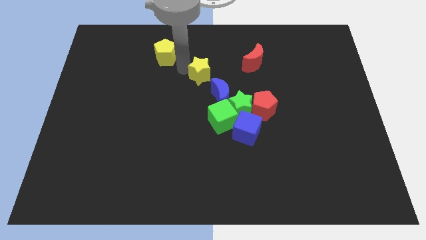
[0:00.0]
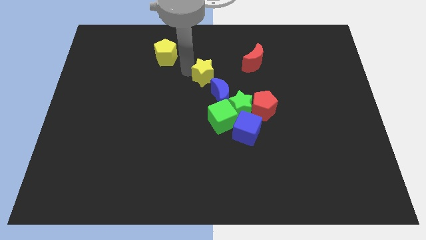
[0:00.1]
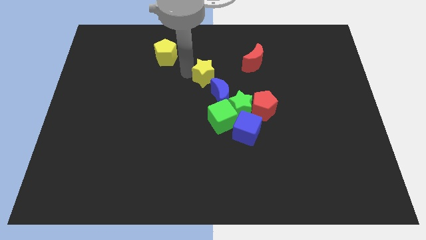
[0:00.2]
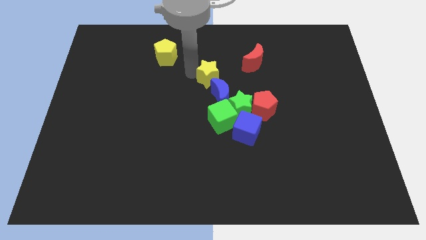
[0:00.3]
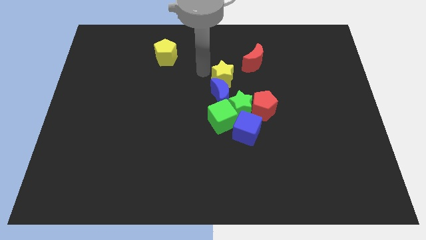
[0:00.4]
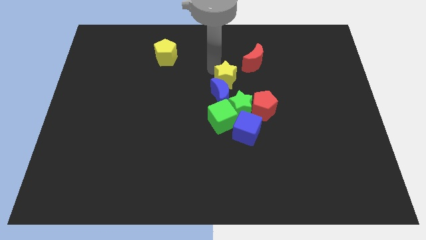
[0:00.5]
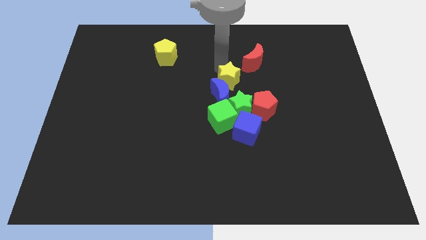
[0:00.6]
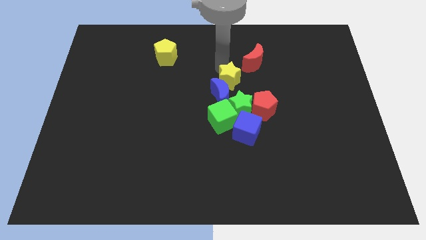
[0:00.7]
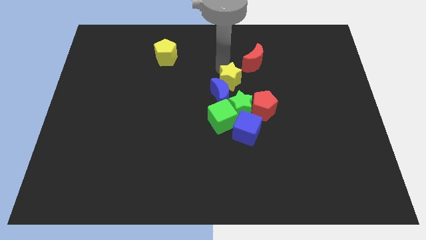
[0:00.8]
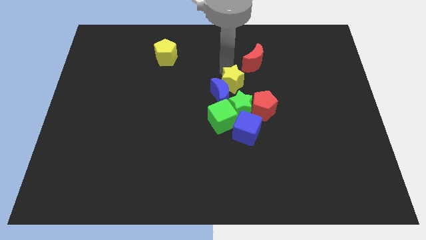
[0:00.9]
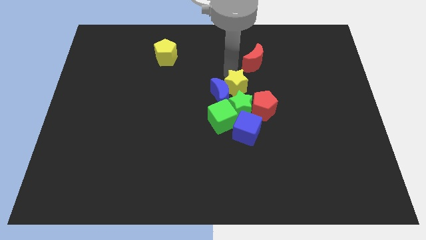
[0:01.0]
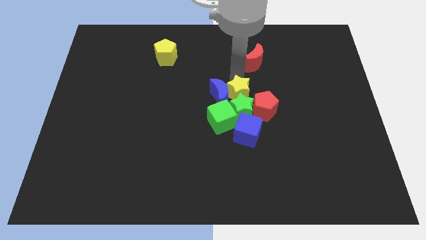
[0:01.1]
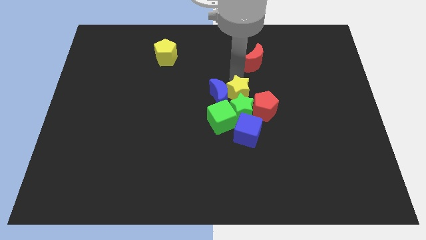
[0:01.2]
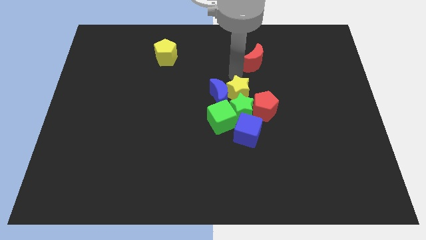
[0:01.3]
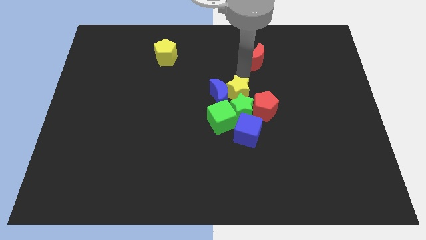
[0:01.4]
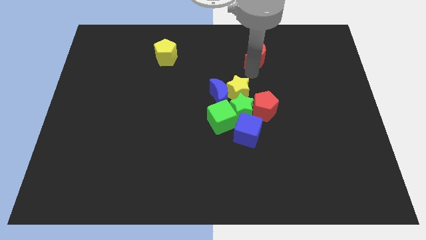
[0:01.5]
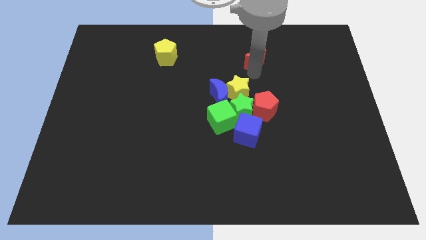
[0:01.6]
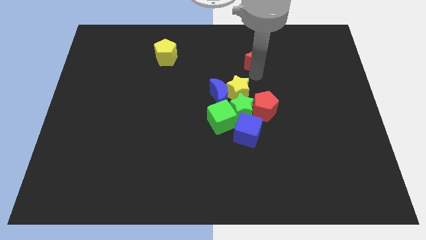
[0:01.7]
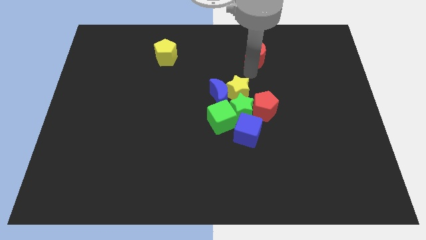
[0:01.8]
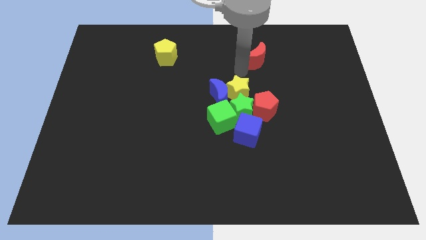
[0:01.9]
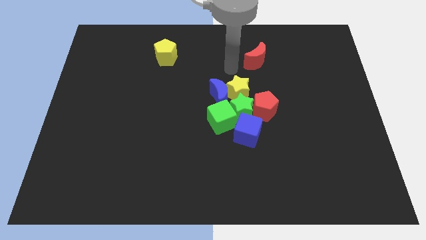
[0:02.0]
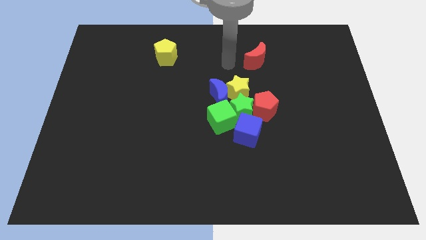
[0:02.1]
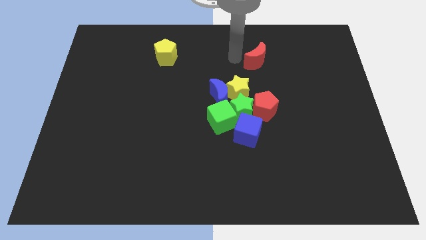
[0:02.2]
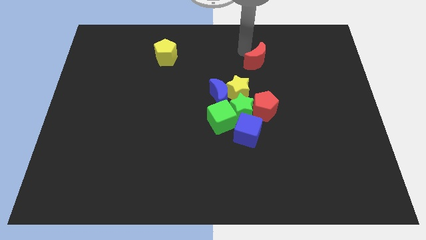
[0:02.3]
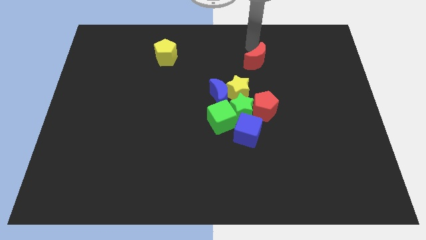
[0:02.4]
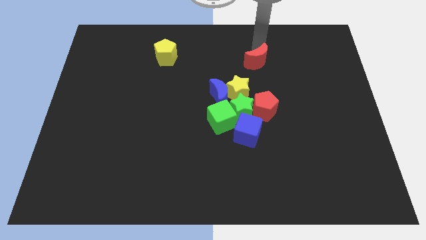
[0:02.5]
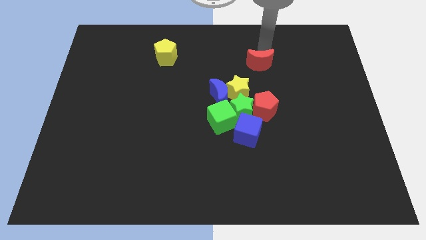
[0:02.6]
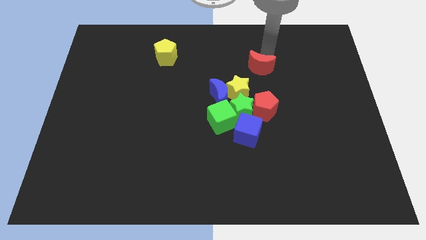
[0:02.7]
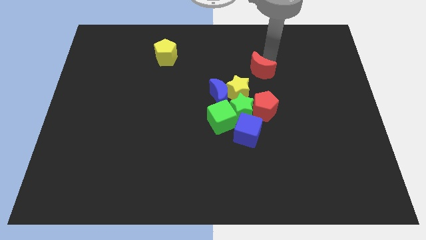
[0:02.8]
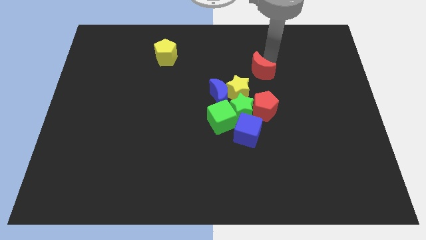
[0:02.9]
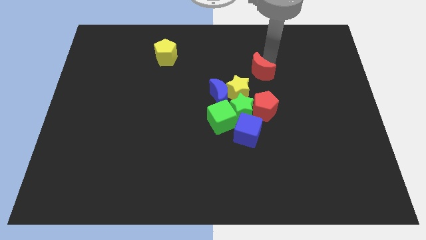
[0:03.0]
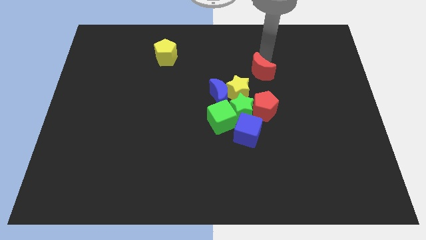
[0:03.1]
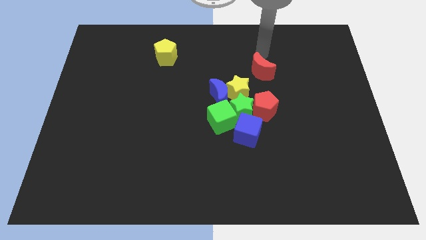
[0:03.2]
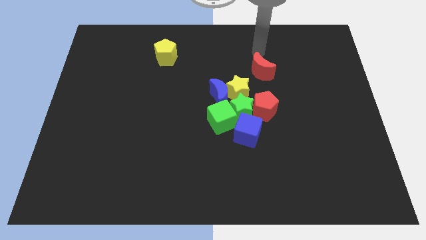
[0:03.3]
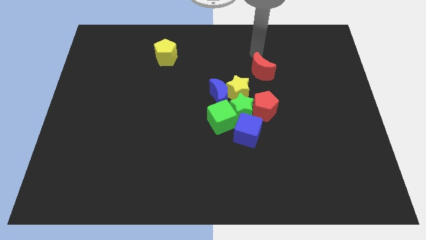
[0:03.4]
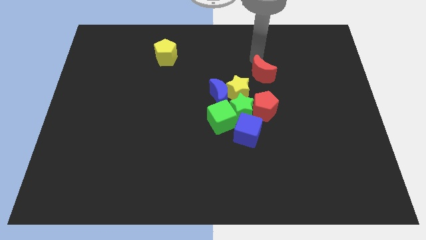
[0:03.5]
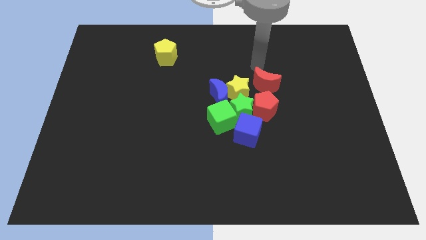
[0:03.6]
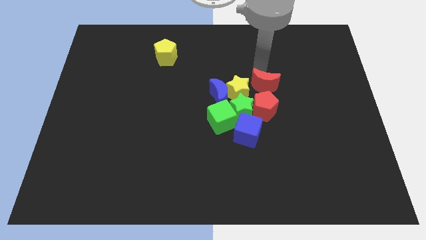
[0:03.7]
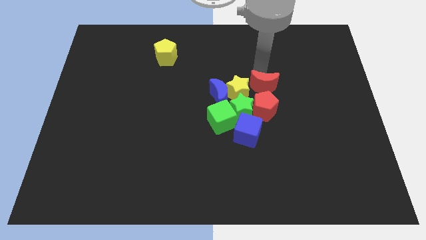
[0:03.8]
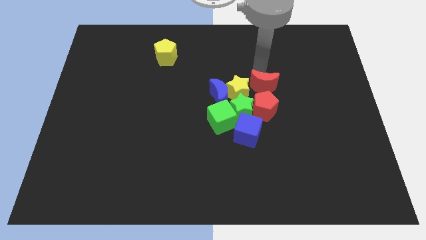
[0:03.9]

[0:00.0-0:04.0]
push the yellow star and red moon towards the group of blocks

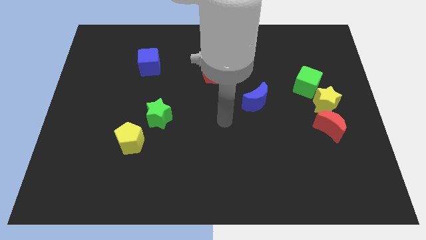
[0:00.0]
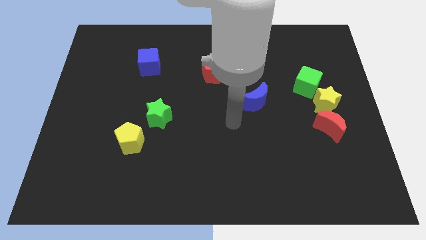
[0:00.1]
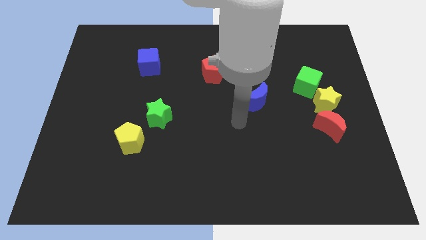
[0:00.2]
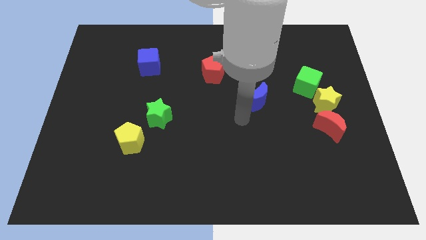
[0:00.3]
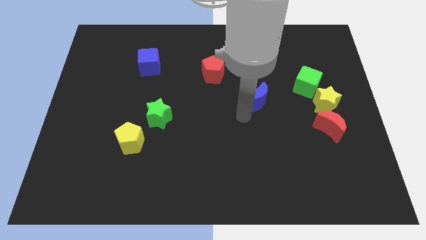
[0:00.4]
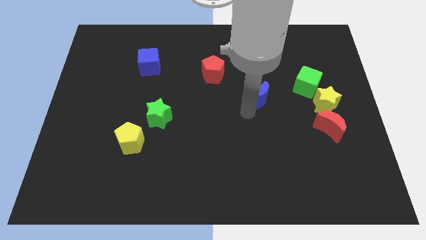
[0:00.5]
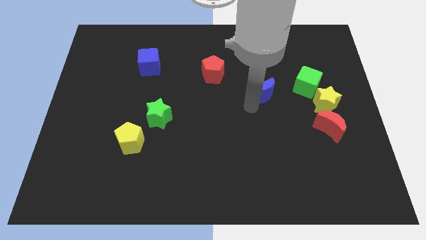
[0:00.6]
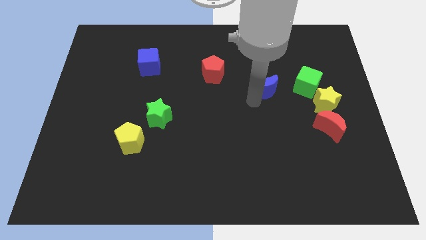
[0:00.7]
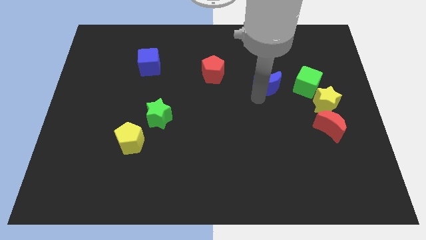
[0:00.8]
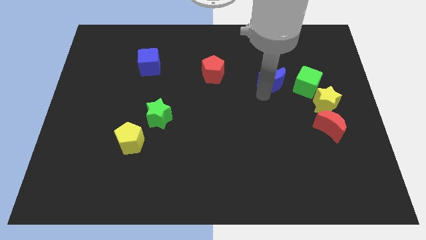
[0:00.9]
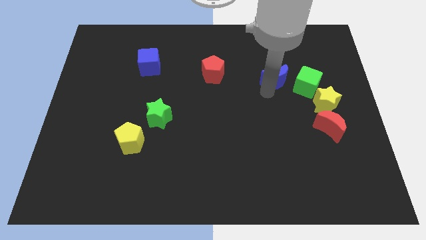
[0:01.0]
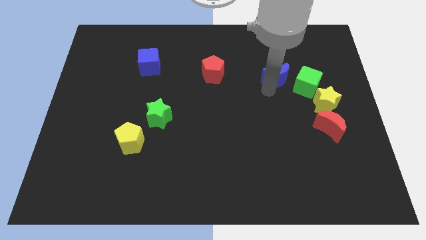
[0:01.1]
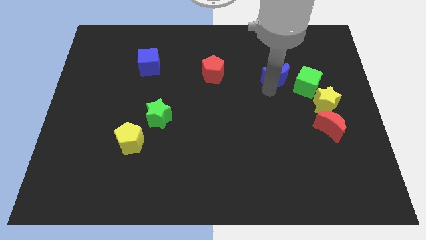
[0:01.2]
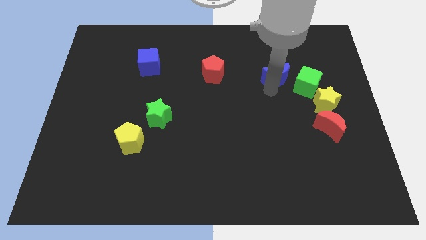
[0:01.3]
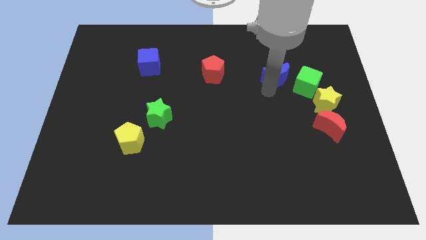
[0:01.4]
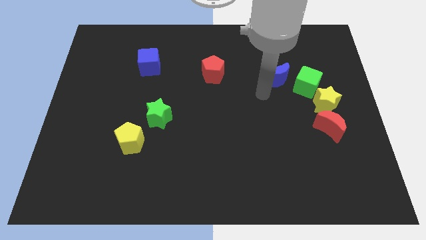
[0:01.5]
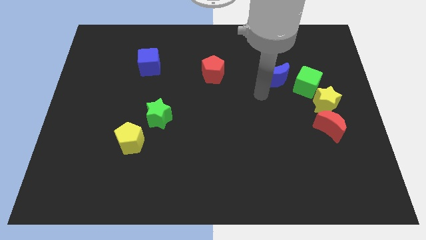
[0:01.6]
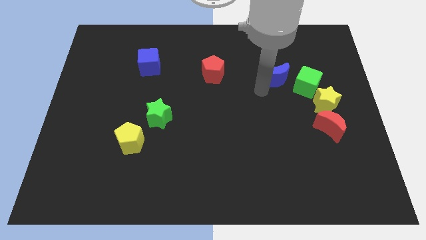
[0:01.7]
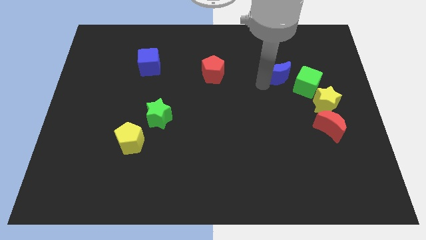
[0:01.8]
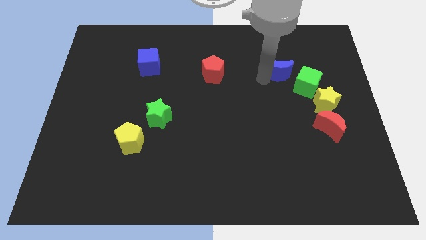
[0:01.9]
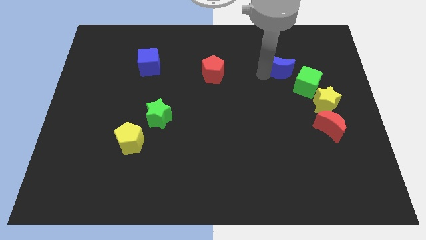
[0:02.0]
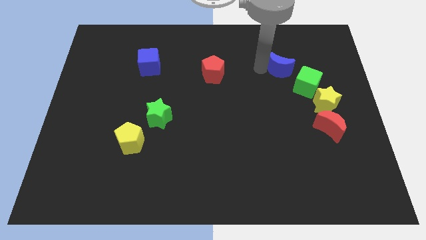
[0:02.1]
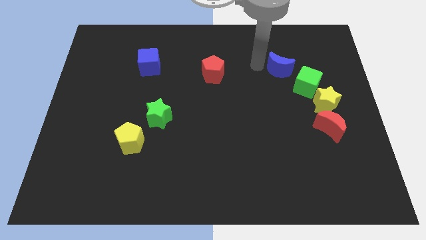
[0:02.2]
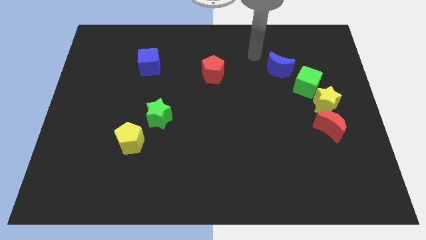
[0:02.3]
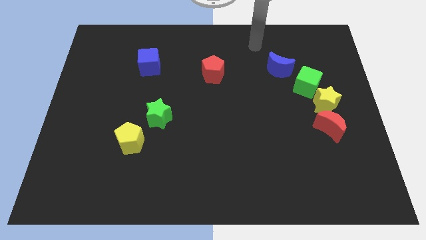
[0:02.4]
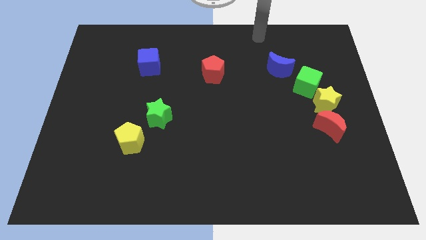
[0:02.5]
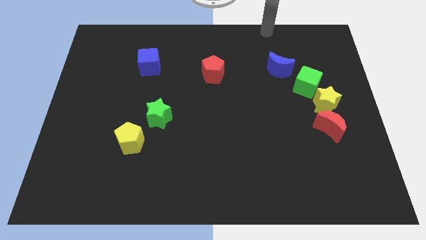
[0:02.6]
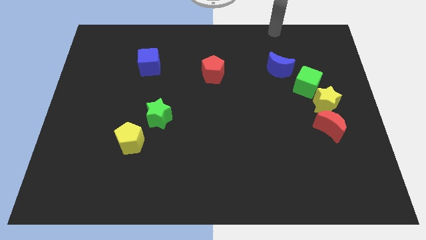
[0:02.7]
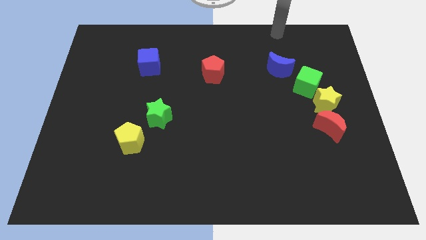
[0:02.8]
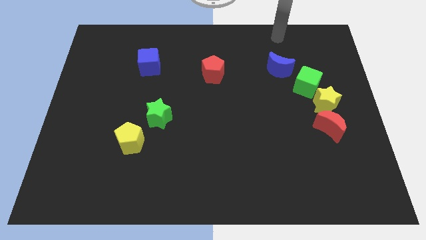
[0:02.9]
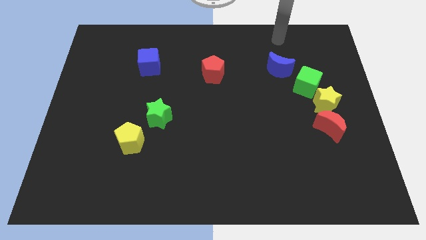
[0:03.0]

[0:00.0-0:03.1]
drag the blue moon and place it next to the green cube

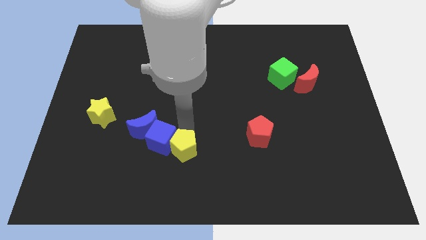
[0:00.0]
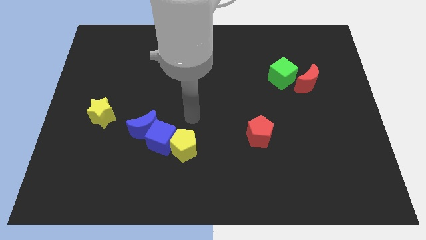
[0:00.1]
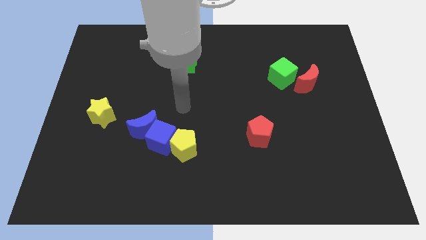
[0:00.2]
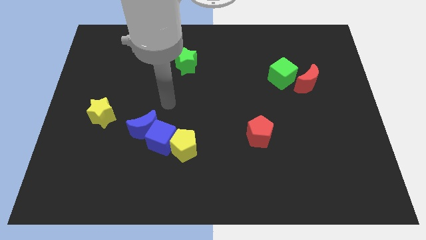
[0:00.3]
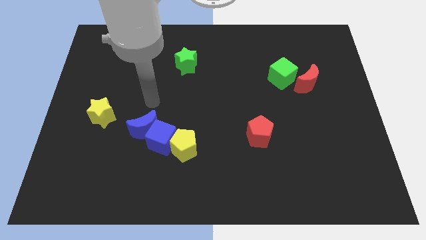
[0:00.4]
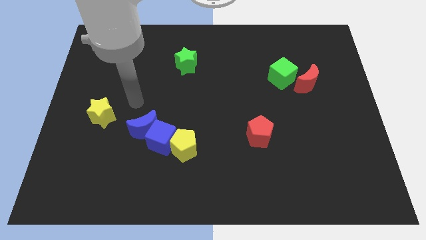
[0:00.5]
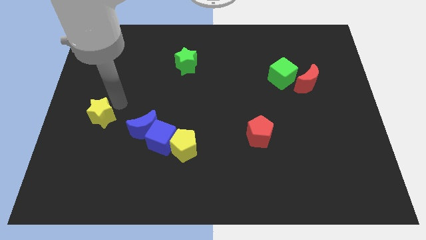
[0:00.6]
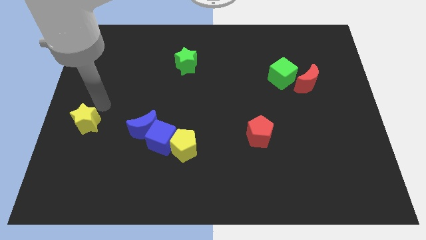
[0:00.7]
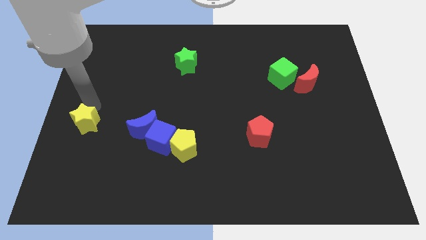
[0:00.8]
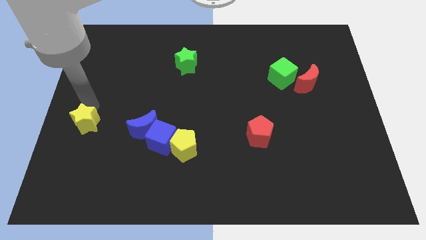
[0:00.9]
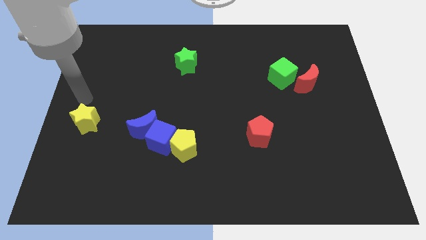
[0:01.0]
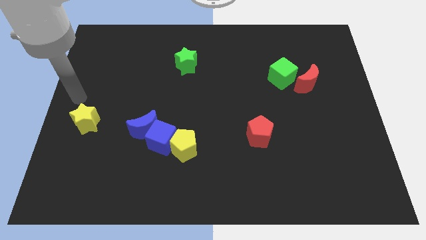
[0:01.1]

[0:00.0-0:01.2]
move your arm away from yellow pentagon

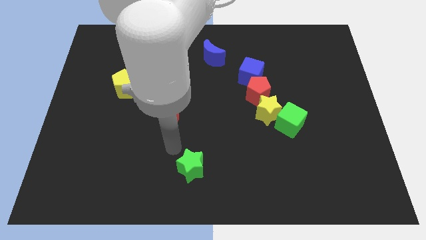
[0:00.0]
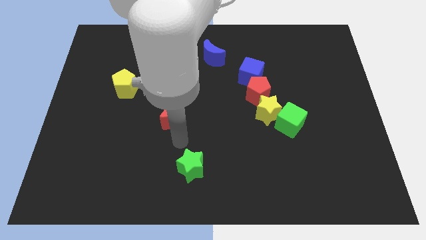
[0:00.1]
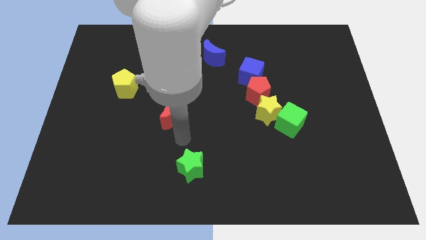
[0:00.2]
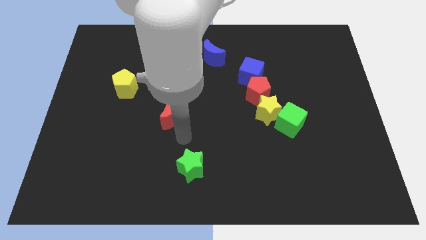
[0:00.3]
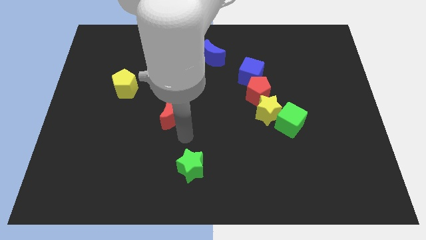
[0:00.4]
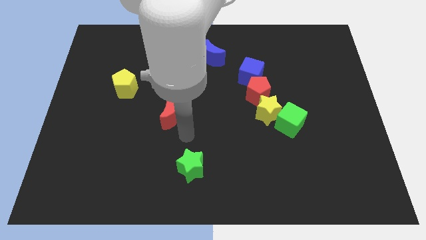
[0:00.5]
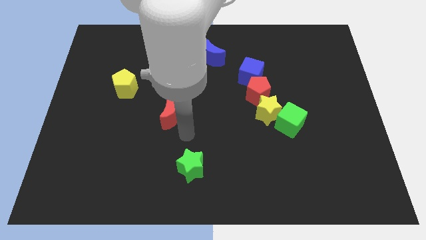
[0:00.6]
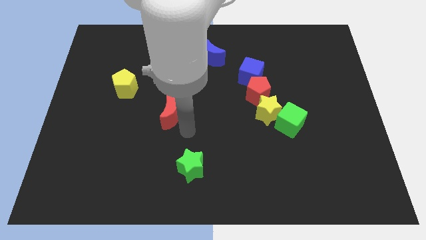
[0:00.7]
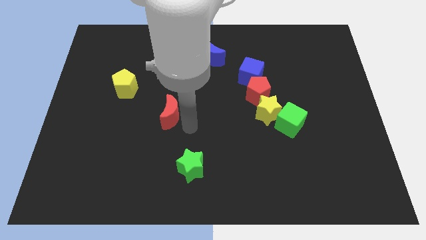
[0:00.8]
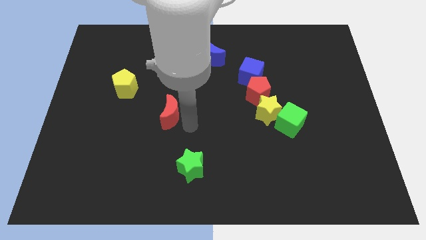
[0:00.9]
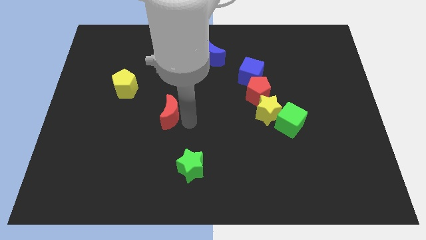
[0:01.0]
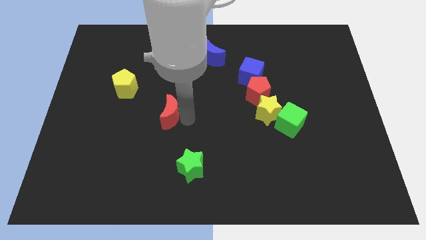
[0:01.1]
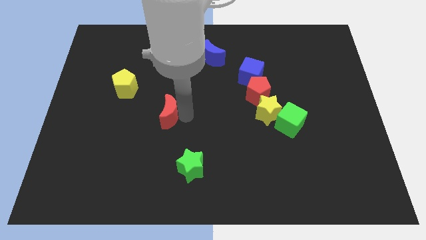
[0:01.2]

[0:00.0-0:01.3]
touch the right side of the red crescent
